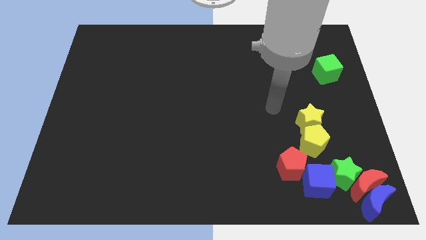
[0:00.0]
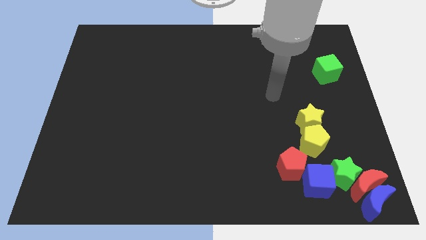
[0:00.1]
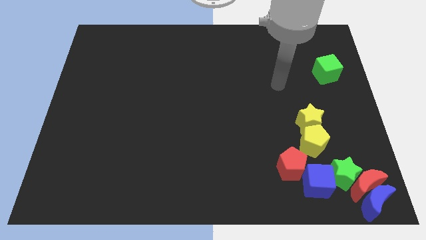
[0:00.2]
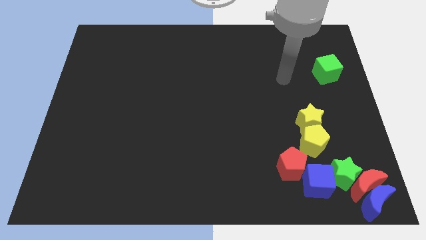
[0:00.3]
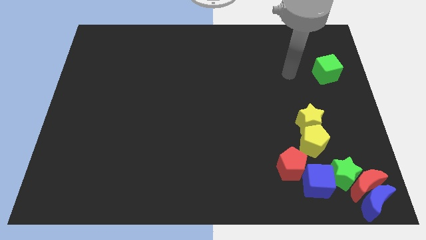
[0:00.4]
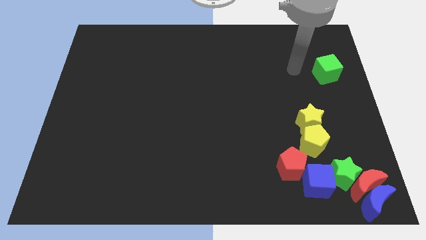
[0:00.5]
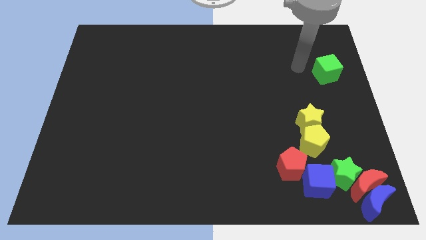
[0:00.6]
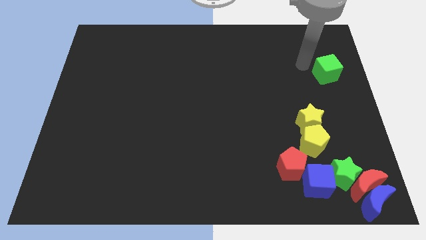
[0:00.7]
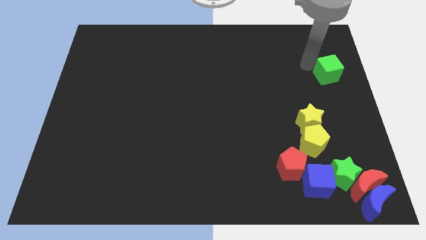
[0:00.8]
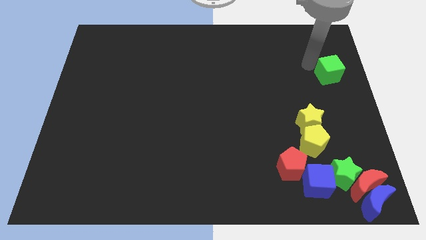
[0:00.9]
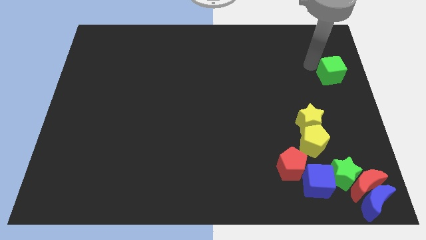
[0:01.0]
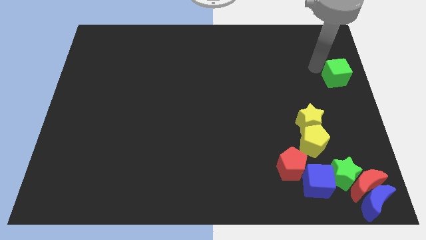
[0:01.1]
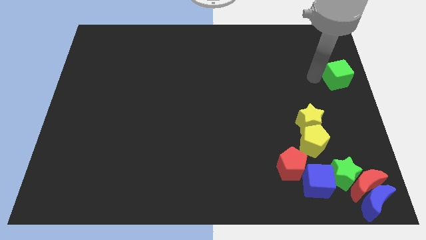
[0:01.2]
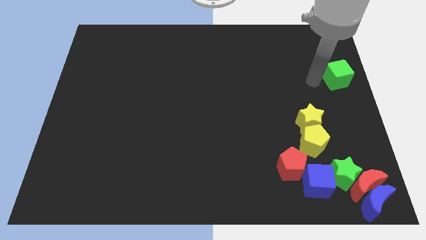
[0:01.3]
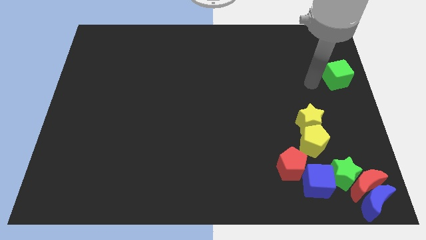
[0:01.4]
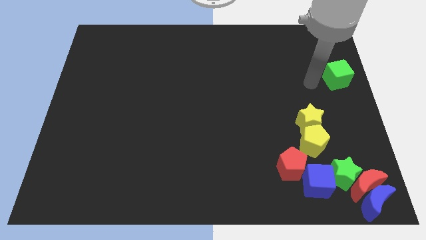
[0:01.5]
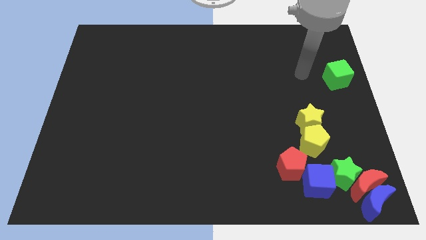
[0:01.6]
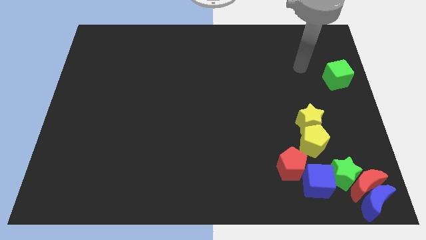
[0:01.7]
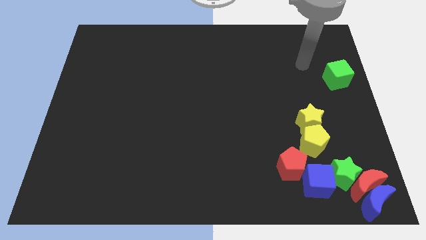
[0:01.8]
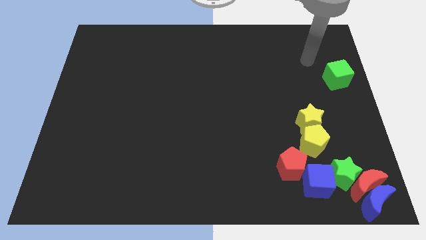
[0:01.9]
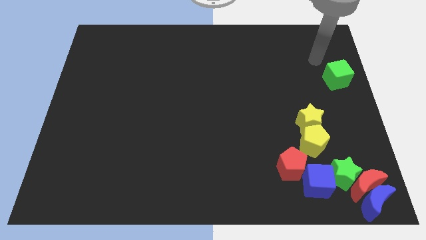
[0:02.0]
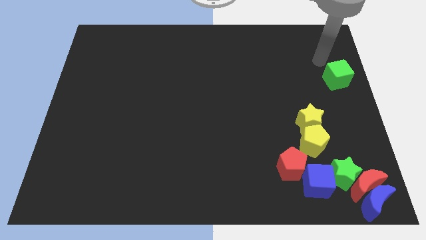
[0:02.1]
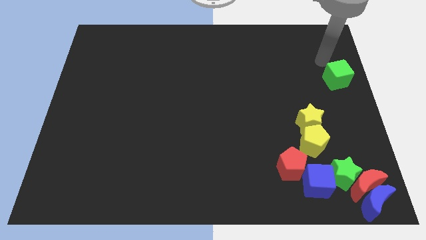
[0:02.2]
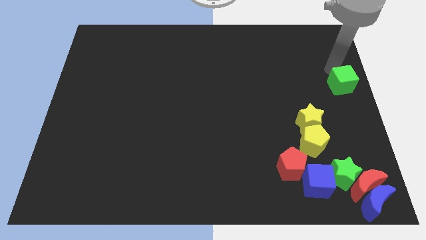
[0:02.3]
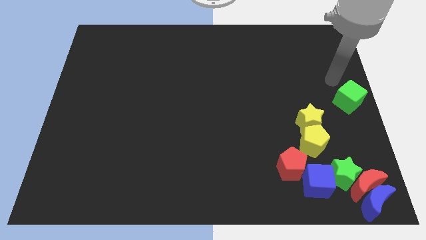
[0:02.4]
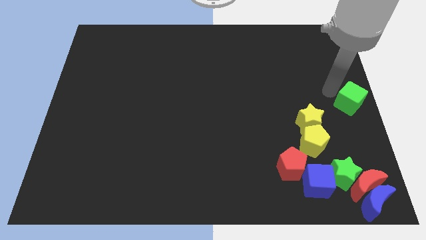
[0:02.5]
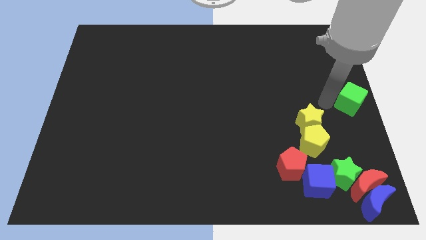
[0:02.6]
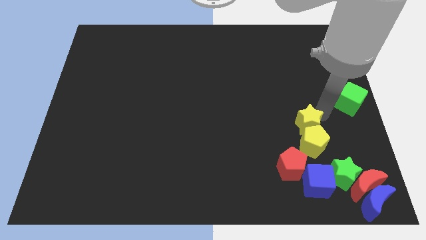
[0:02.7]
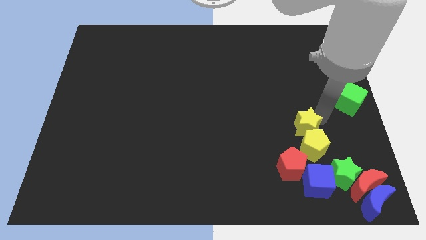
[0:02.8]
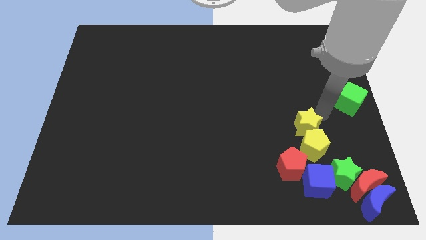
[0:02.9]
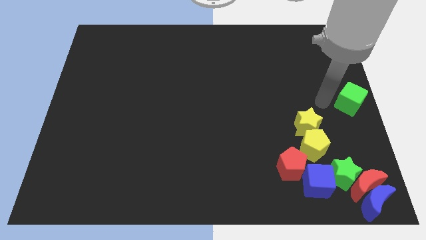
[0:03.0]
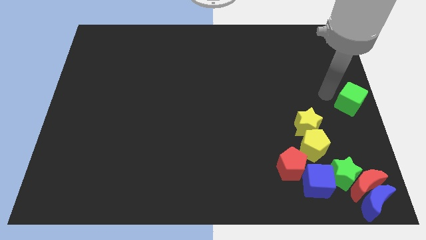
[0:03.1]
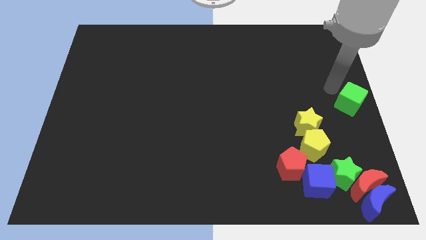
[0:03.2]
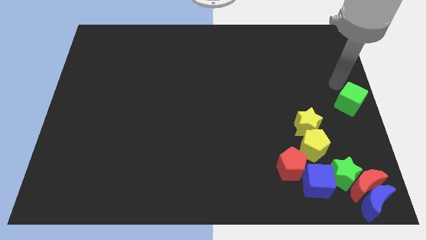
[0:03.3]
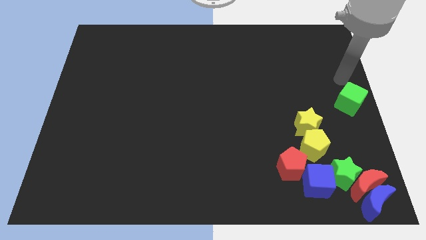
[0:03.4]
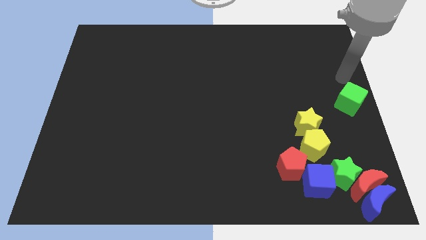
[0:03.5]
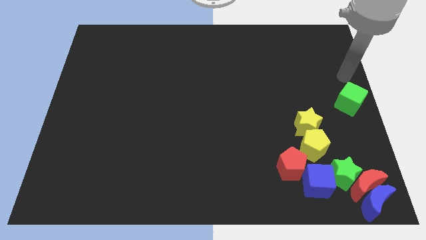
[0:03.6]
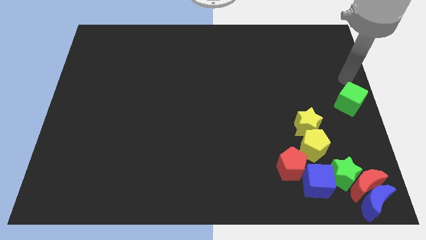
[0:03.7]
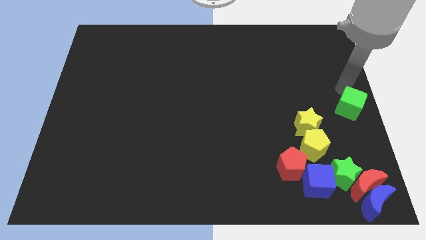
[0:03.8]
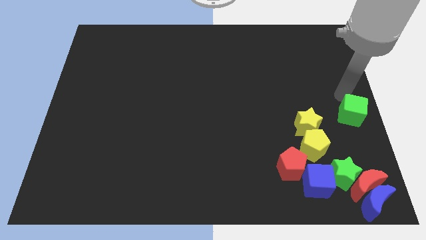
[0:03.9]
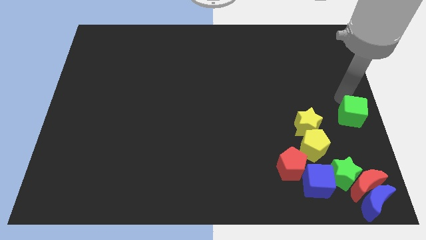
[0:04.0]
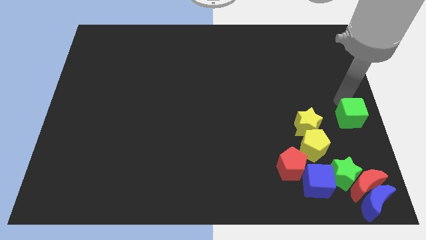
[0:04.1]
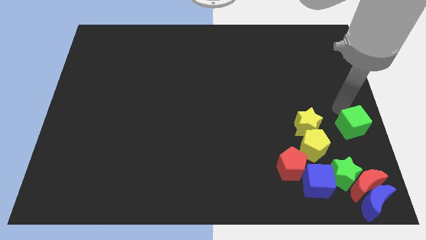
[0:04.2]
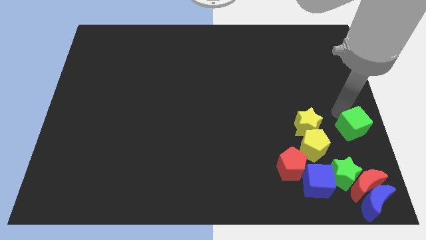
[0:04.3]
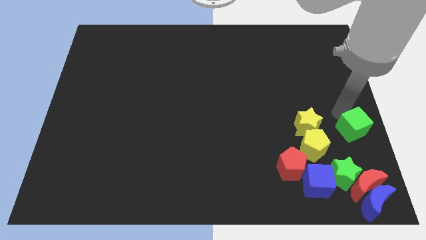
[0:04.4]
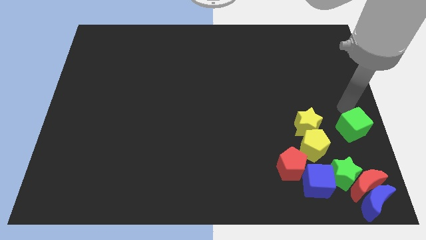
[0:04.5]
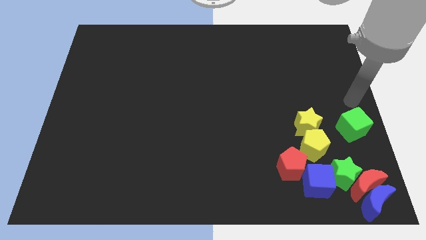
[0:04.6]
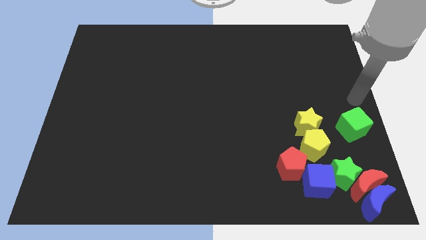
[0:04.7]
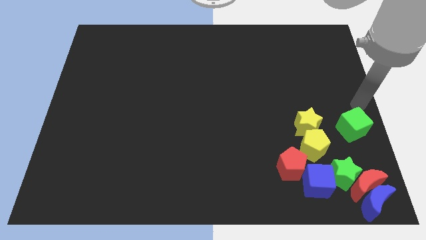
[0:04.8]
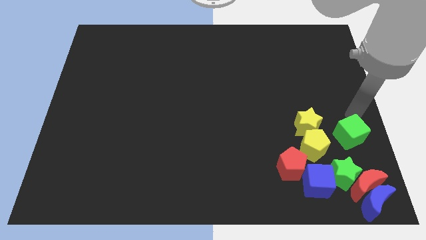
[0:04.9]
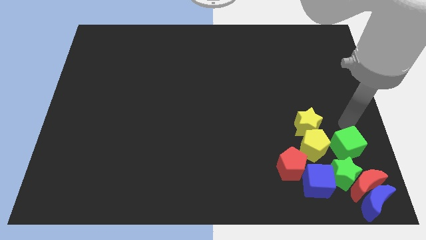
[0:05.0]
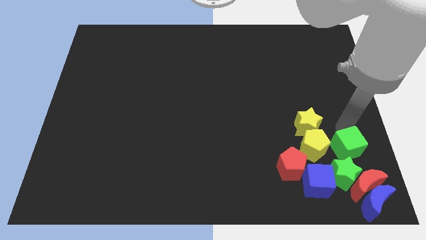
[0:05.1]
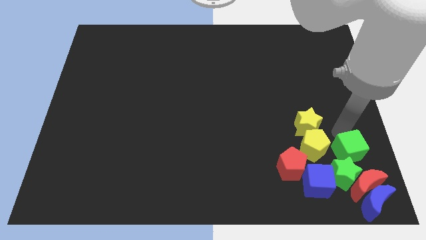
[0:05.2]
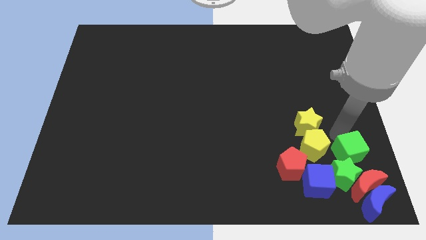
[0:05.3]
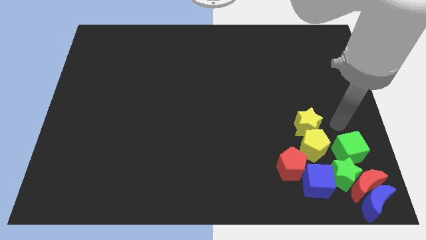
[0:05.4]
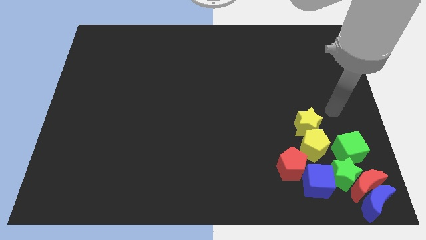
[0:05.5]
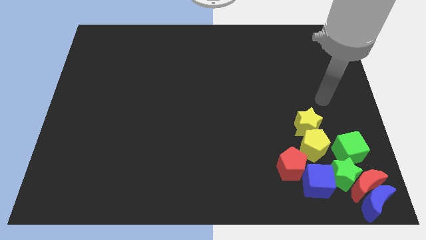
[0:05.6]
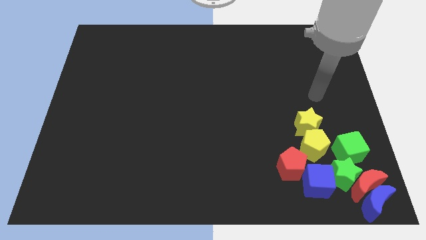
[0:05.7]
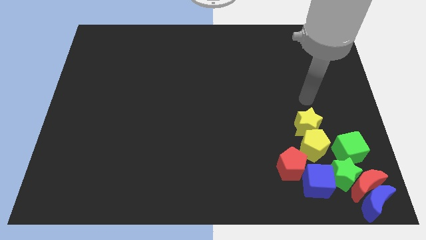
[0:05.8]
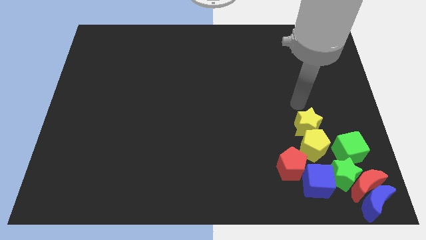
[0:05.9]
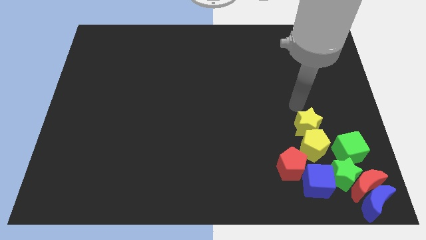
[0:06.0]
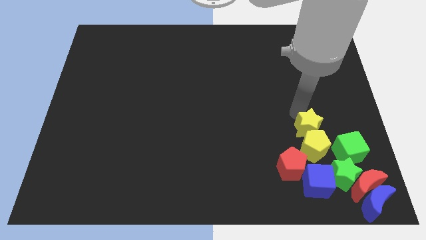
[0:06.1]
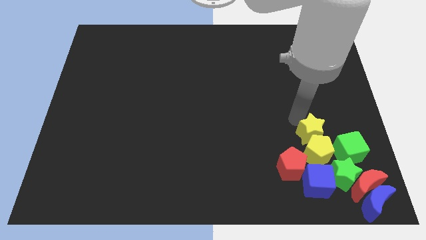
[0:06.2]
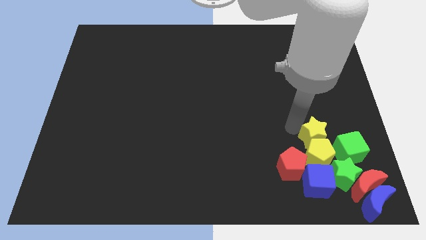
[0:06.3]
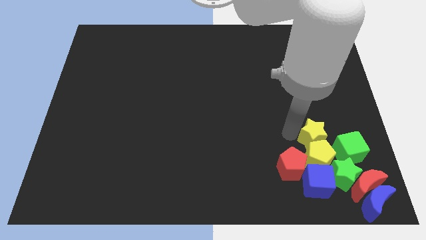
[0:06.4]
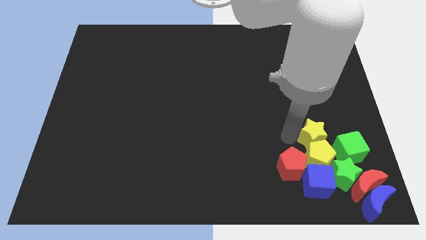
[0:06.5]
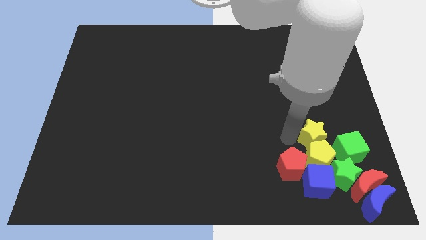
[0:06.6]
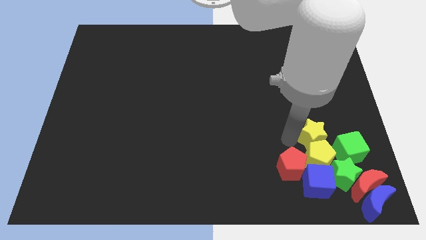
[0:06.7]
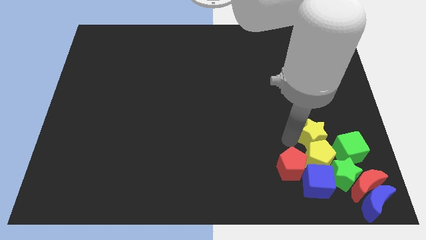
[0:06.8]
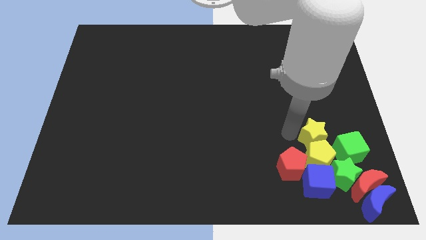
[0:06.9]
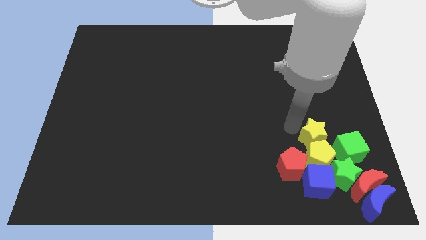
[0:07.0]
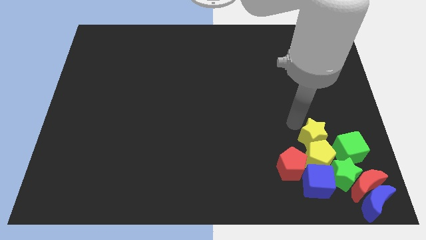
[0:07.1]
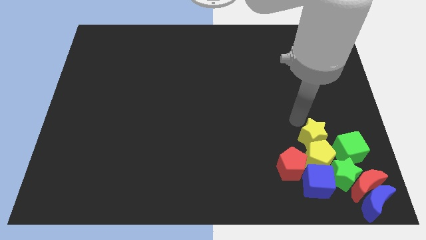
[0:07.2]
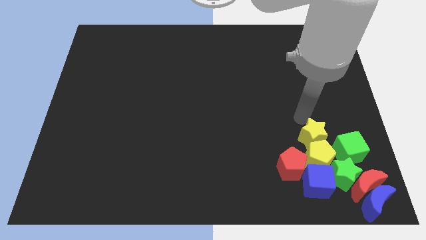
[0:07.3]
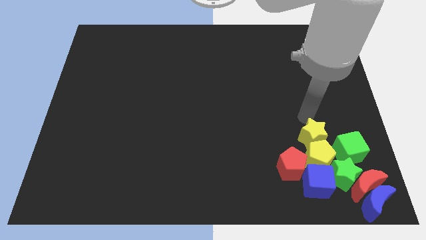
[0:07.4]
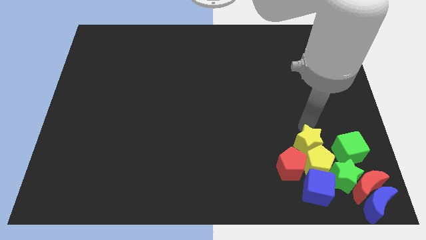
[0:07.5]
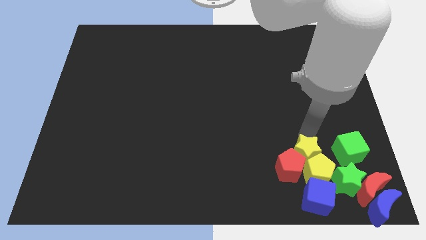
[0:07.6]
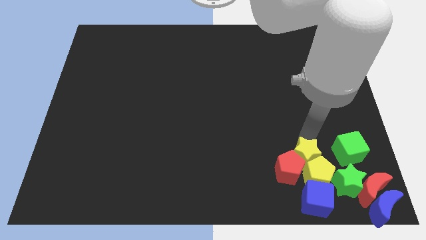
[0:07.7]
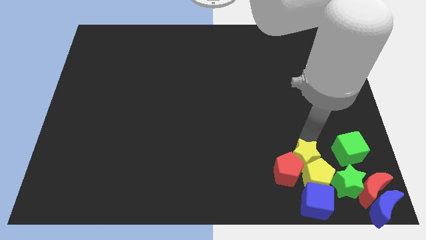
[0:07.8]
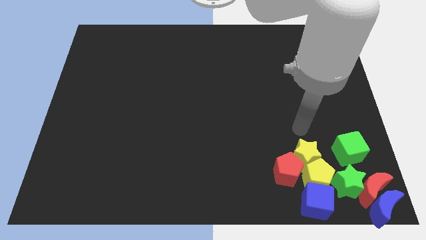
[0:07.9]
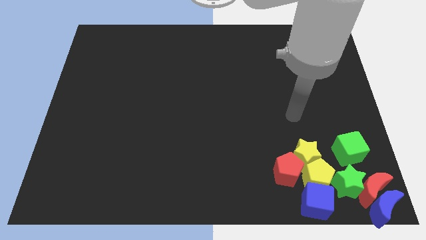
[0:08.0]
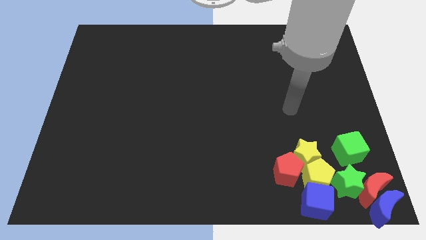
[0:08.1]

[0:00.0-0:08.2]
push the green cube into the green star

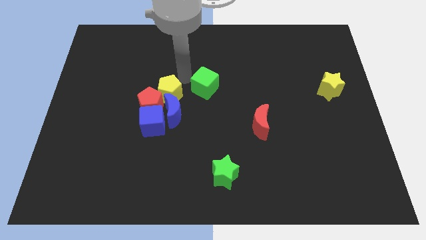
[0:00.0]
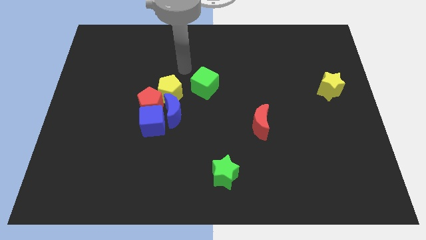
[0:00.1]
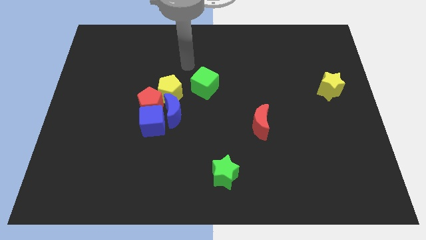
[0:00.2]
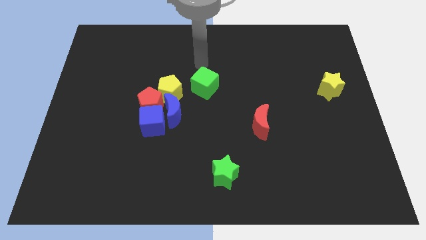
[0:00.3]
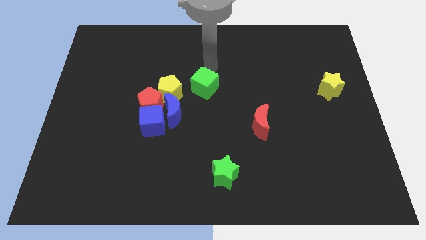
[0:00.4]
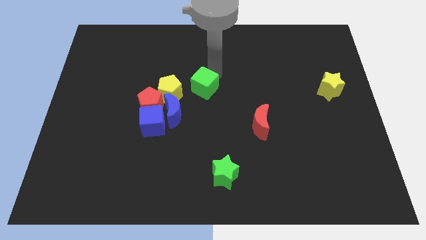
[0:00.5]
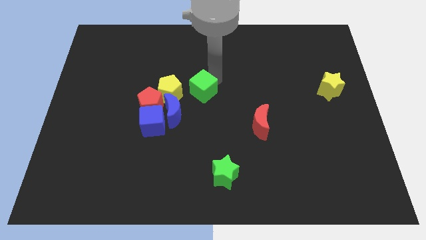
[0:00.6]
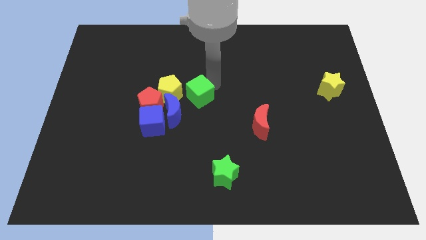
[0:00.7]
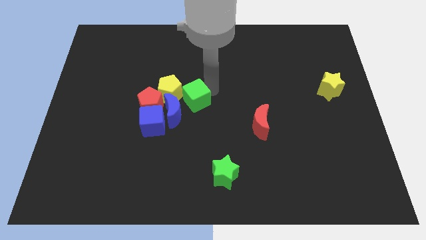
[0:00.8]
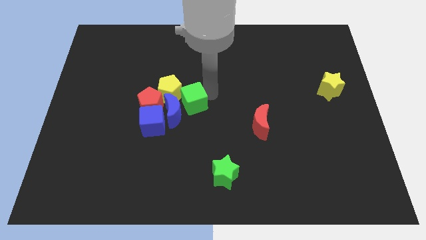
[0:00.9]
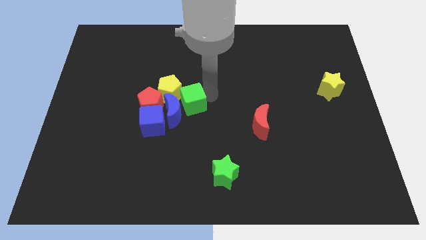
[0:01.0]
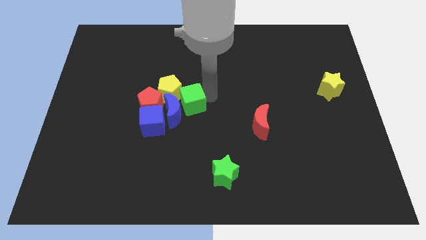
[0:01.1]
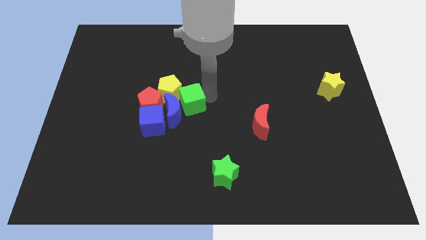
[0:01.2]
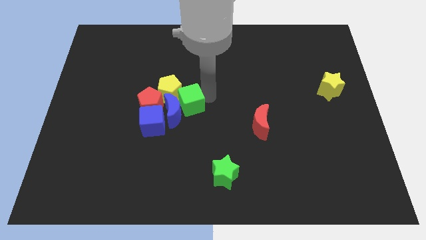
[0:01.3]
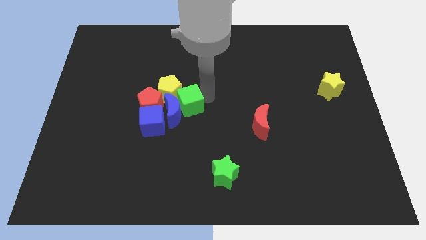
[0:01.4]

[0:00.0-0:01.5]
push the green cube towards the blue crescent
